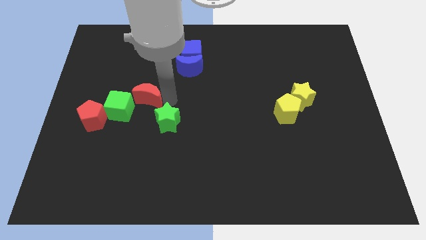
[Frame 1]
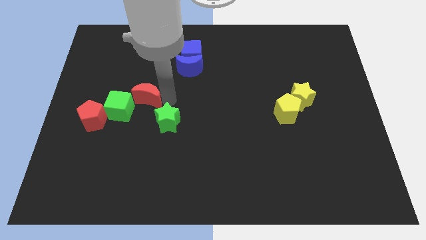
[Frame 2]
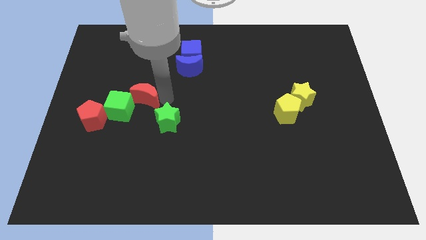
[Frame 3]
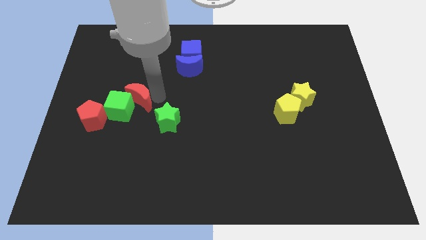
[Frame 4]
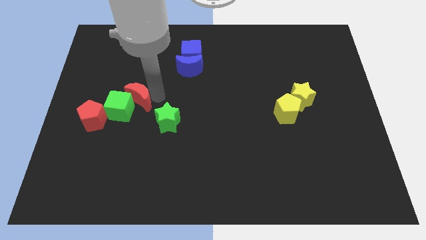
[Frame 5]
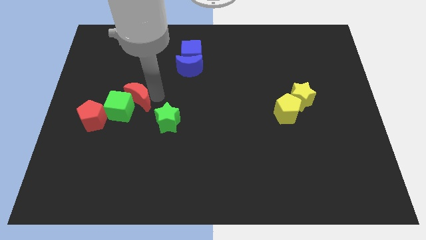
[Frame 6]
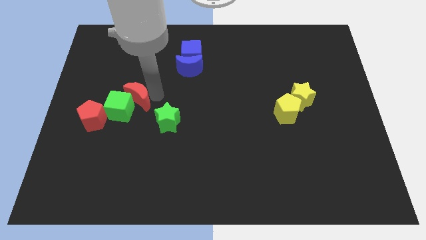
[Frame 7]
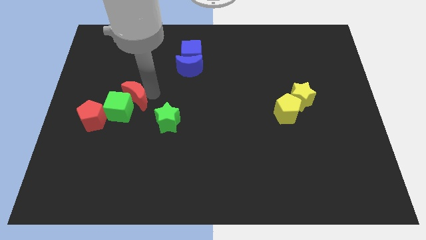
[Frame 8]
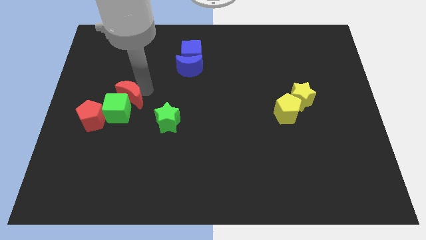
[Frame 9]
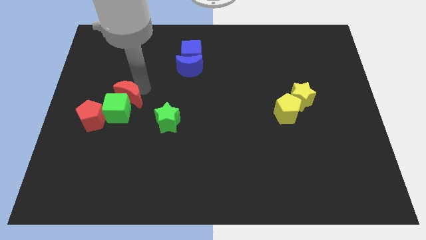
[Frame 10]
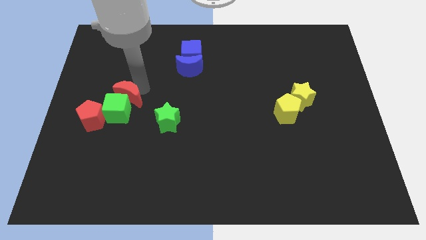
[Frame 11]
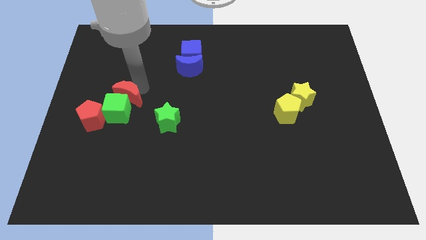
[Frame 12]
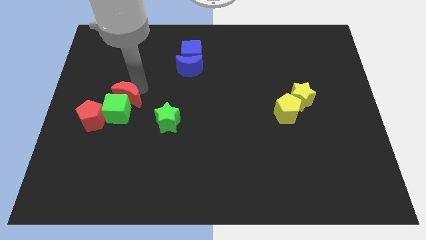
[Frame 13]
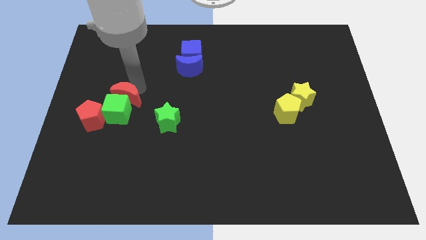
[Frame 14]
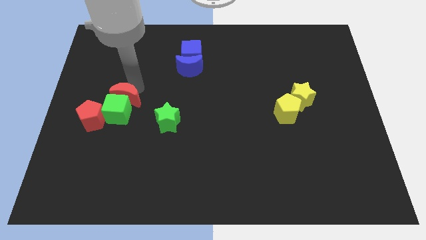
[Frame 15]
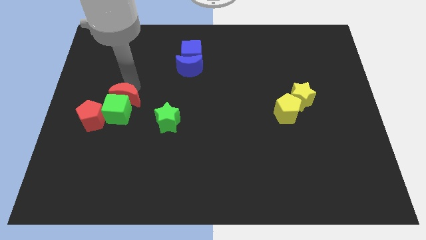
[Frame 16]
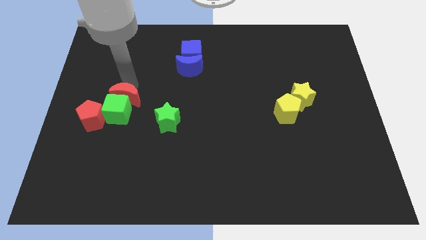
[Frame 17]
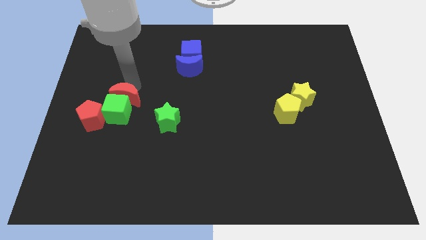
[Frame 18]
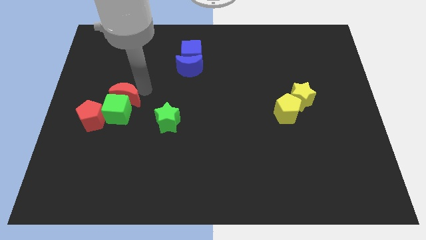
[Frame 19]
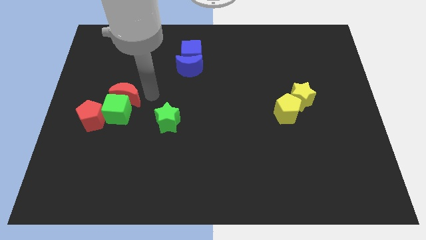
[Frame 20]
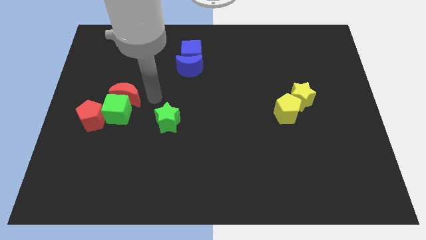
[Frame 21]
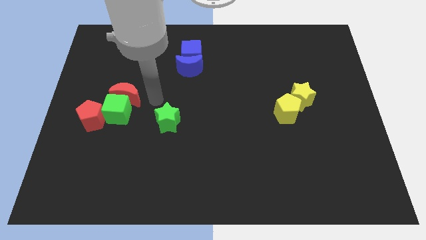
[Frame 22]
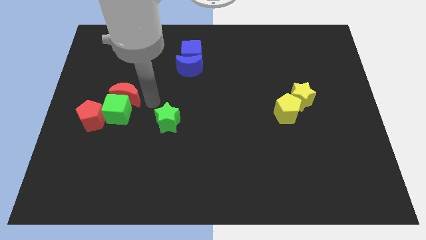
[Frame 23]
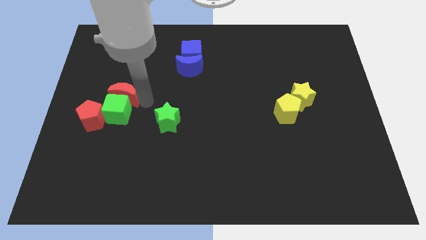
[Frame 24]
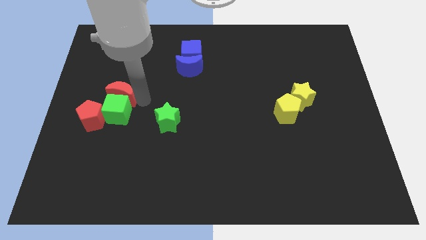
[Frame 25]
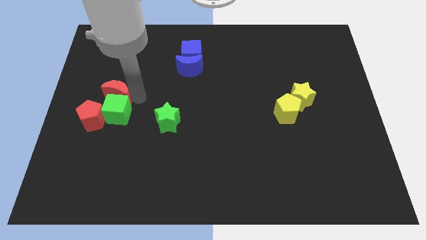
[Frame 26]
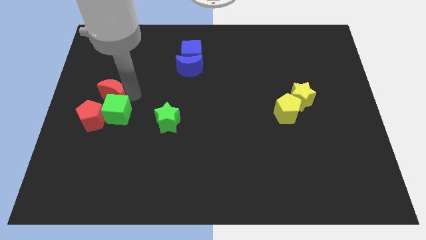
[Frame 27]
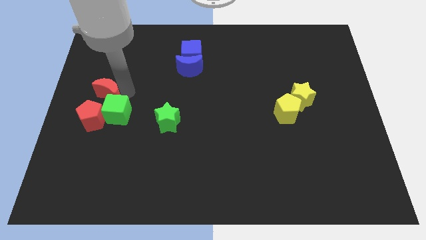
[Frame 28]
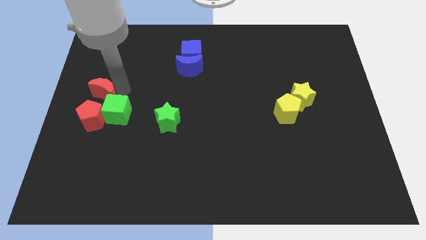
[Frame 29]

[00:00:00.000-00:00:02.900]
move the red moon slightly to the left

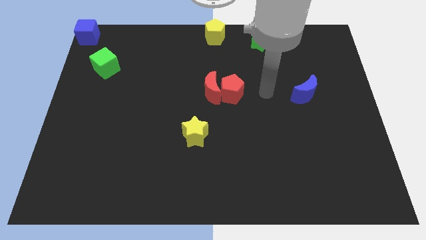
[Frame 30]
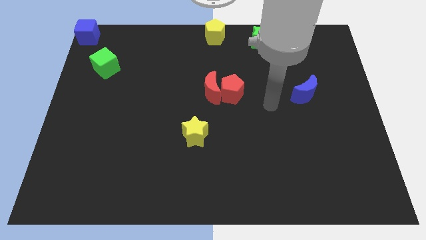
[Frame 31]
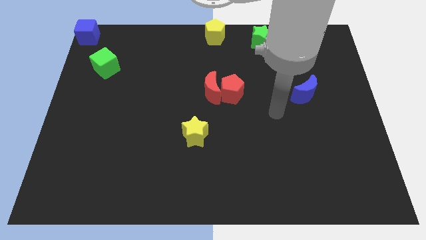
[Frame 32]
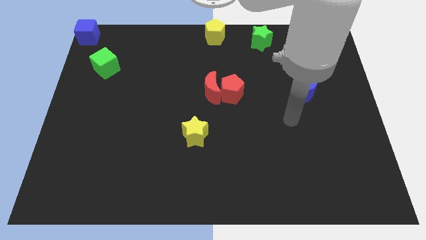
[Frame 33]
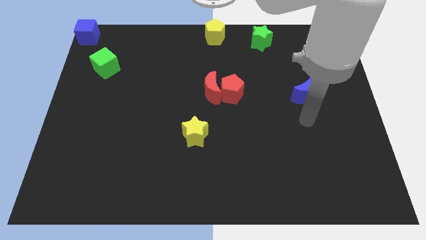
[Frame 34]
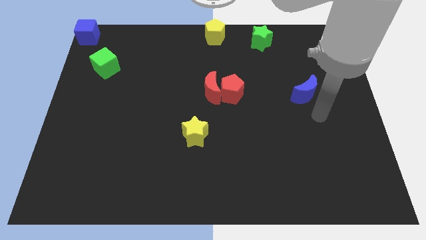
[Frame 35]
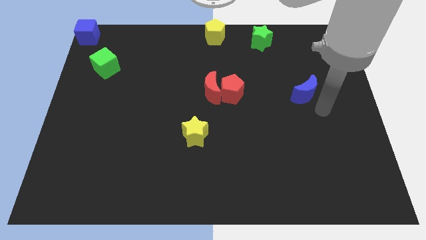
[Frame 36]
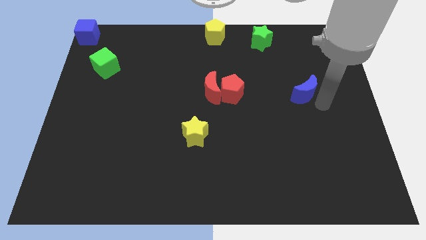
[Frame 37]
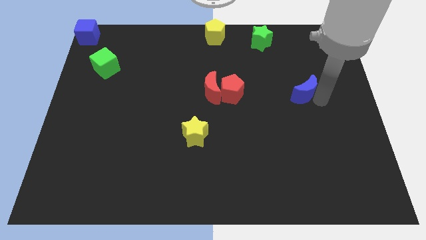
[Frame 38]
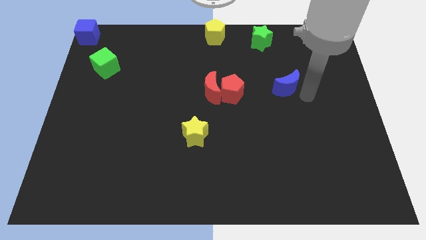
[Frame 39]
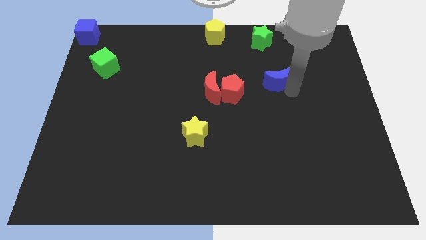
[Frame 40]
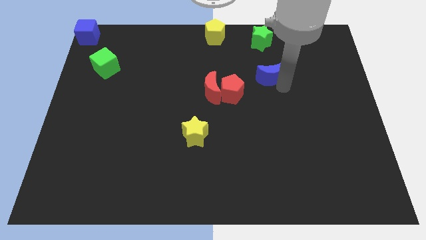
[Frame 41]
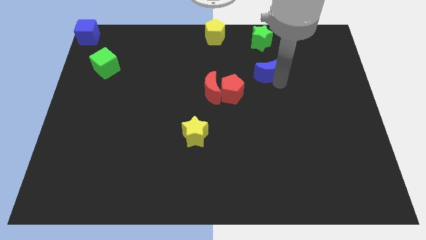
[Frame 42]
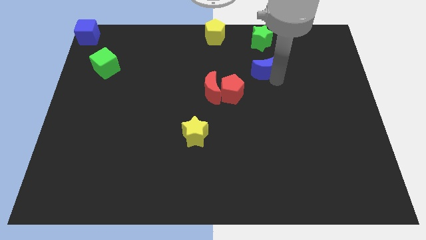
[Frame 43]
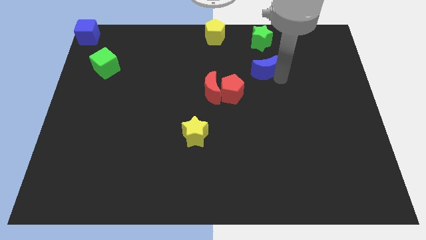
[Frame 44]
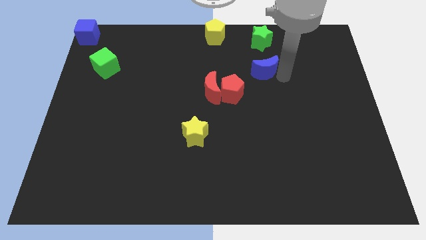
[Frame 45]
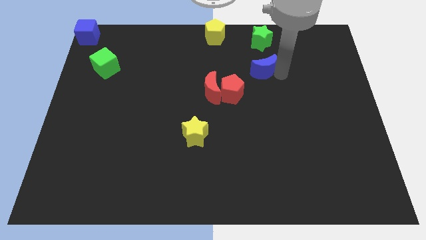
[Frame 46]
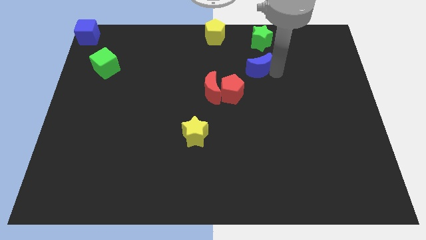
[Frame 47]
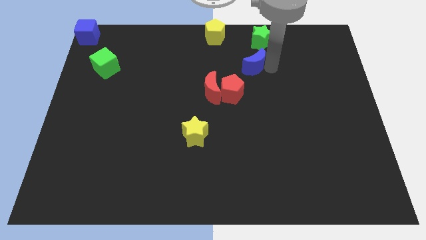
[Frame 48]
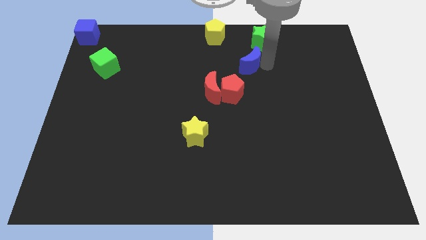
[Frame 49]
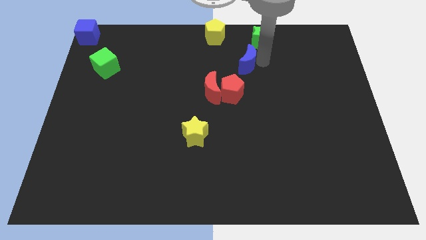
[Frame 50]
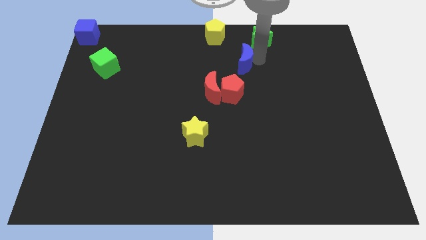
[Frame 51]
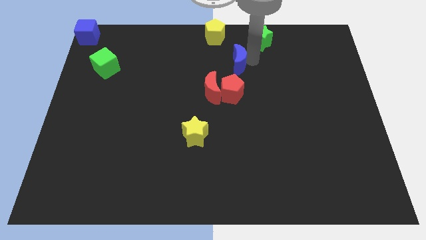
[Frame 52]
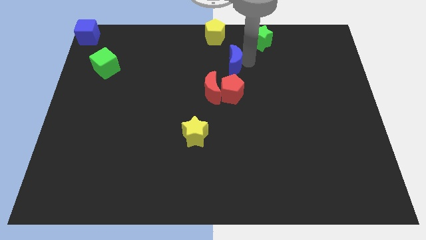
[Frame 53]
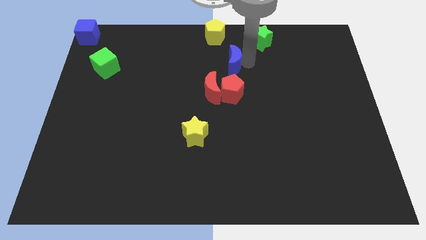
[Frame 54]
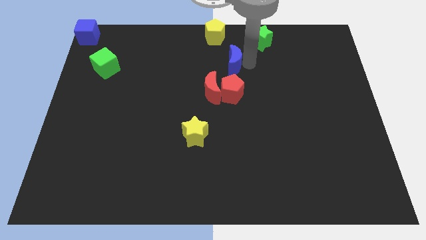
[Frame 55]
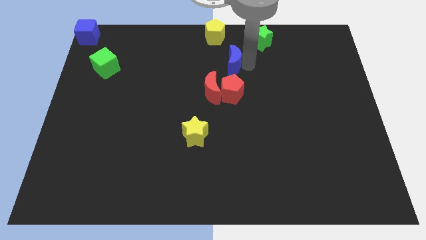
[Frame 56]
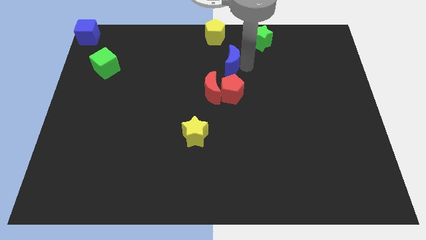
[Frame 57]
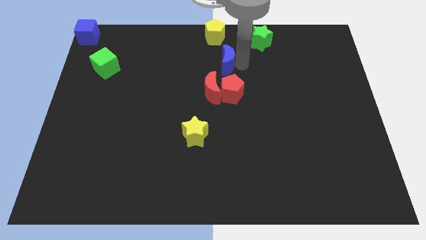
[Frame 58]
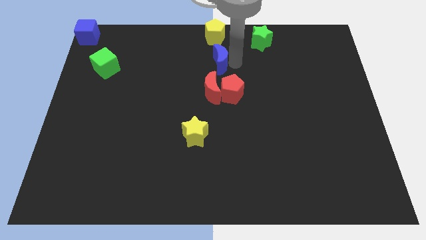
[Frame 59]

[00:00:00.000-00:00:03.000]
push the blue crescent to the top of the red pentagon

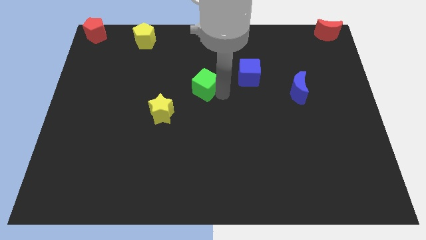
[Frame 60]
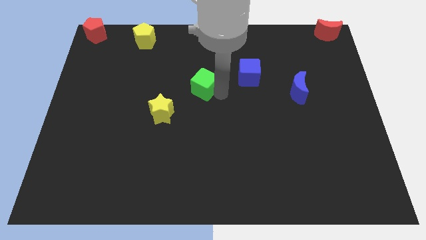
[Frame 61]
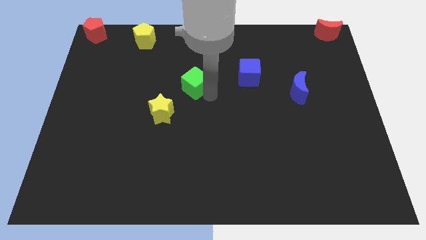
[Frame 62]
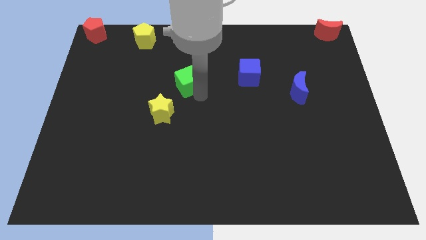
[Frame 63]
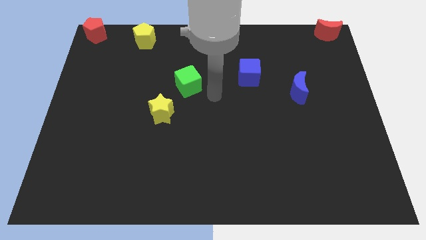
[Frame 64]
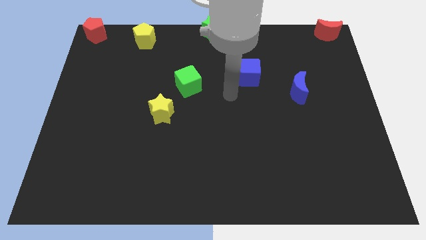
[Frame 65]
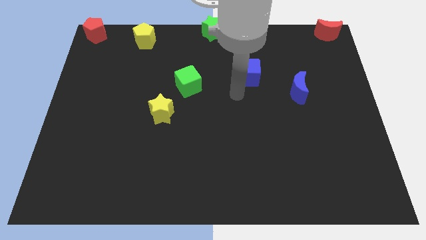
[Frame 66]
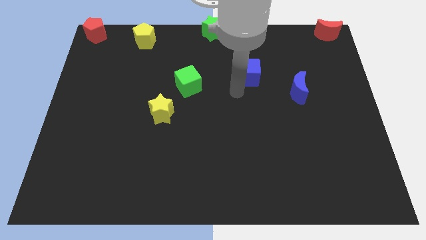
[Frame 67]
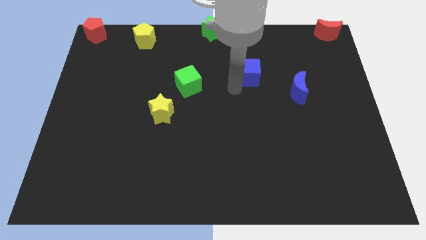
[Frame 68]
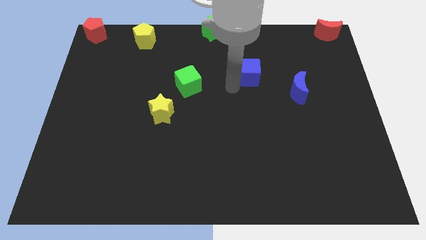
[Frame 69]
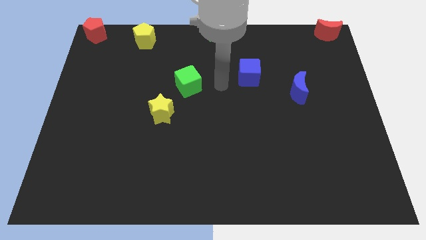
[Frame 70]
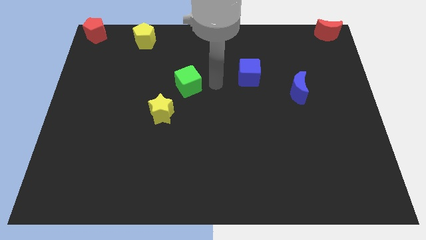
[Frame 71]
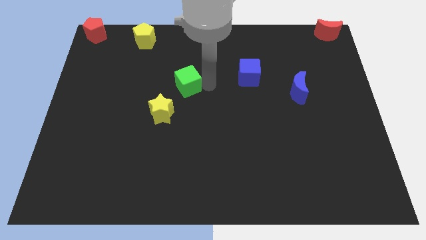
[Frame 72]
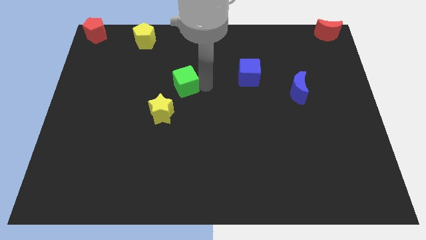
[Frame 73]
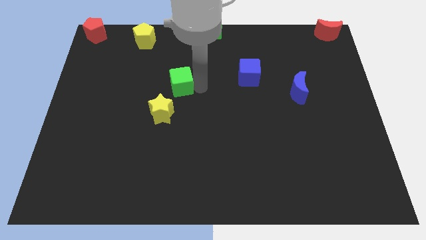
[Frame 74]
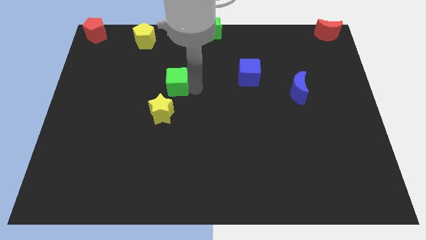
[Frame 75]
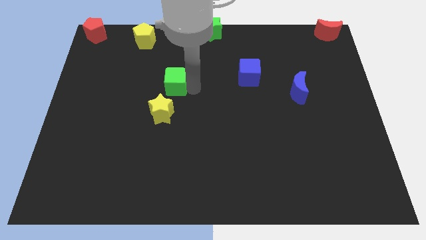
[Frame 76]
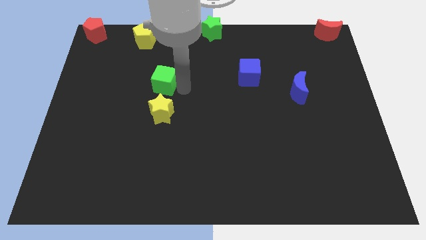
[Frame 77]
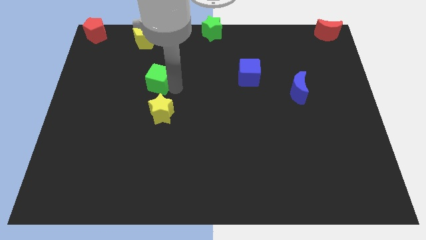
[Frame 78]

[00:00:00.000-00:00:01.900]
place the green cube above the yellow star

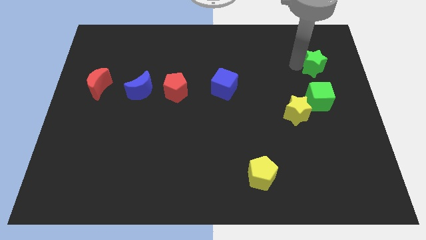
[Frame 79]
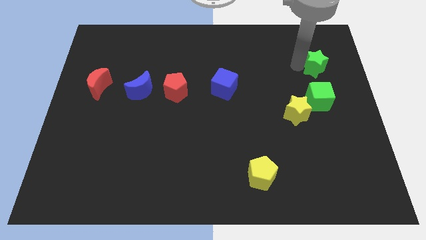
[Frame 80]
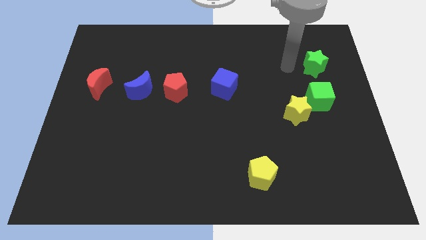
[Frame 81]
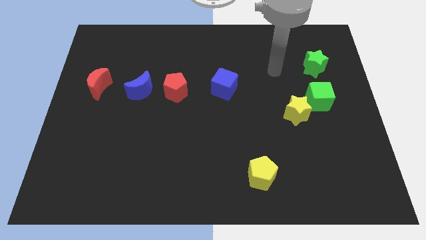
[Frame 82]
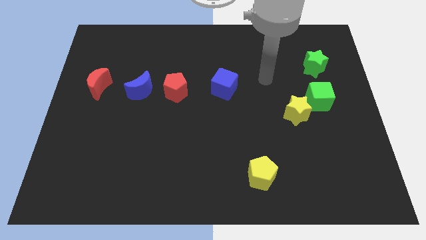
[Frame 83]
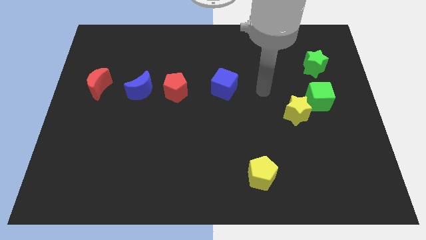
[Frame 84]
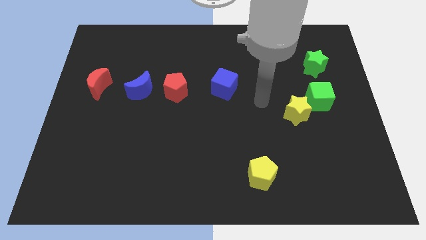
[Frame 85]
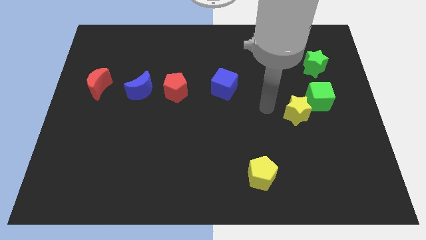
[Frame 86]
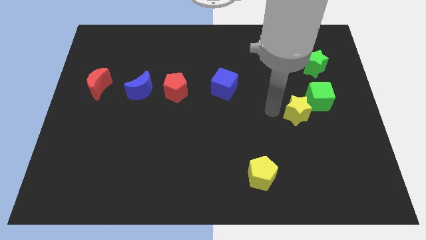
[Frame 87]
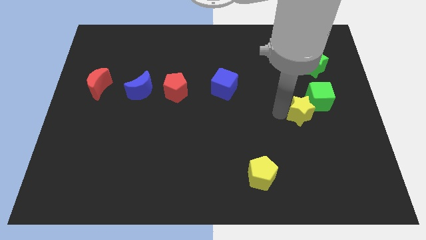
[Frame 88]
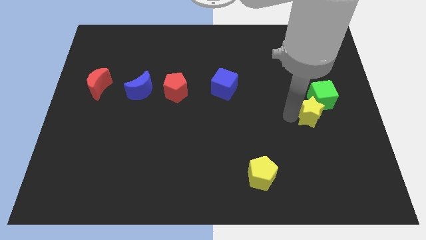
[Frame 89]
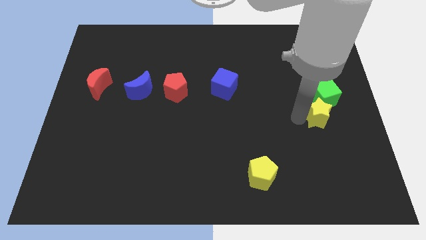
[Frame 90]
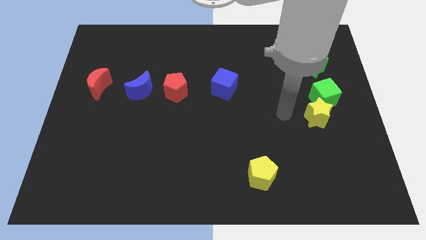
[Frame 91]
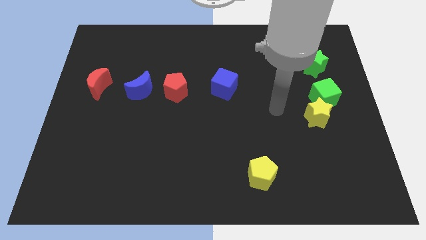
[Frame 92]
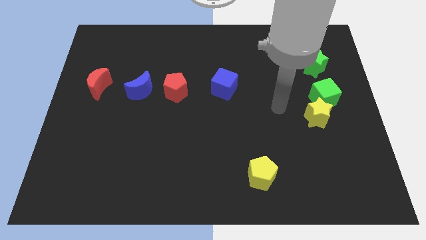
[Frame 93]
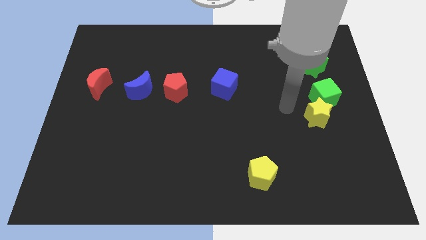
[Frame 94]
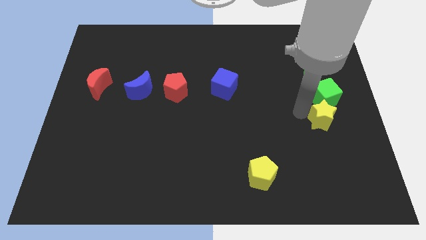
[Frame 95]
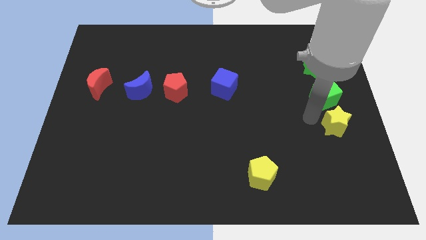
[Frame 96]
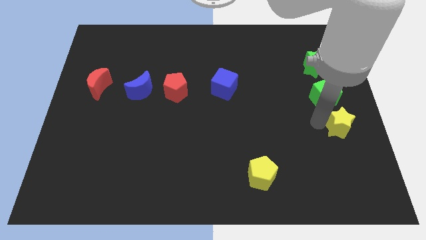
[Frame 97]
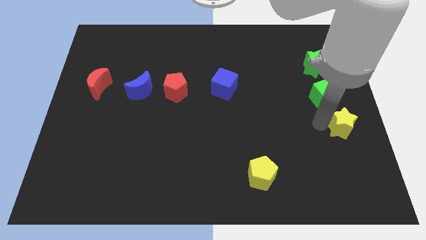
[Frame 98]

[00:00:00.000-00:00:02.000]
move yellow star to the bottom of green cube
